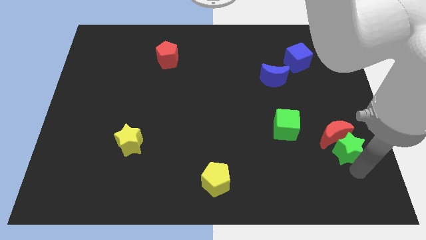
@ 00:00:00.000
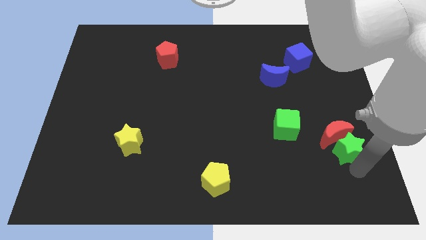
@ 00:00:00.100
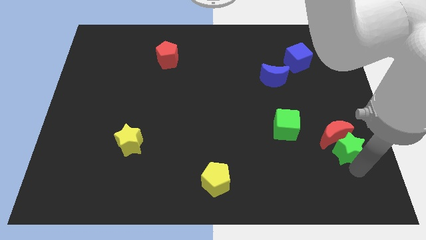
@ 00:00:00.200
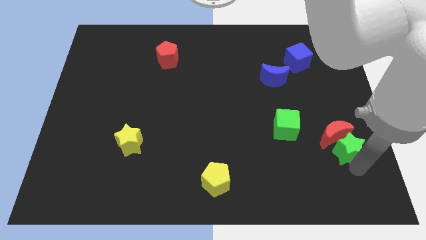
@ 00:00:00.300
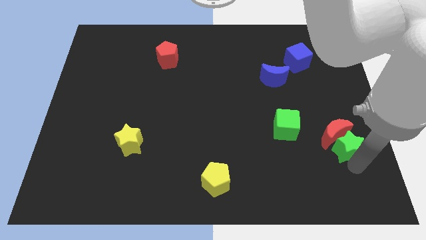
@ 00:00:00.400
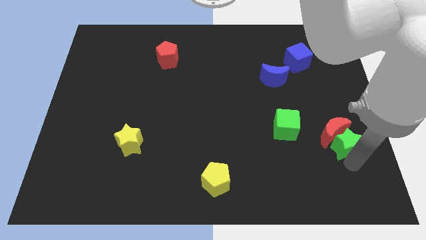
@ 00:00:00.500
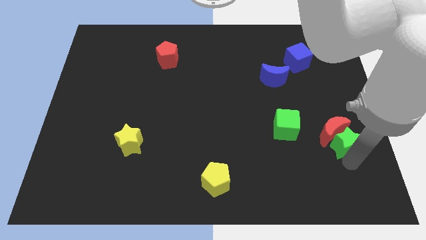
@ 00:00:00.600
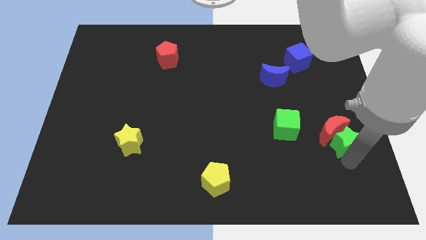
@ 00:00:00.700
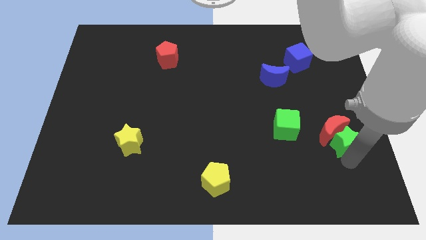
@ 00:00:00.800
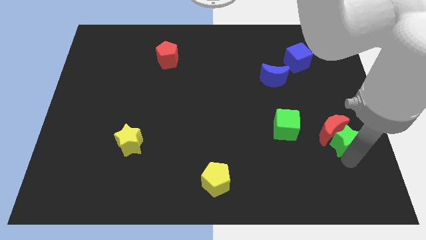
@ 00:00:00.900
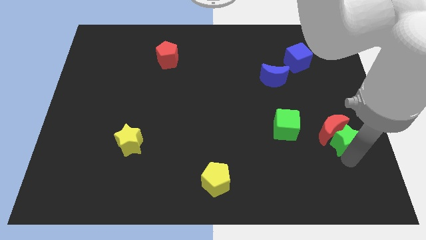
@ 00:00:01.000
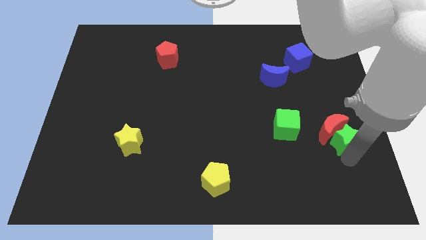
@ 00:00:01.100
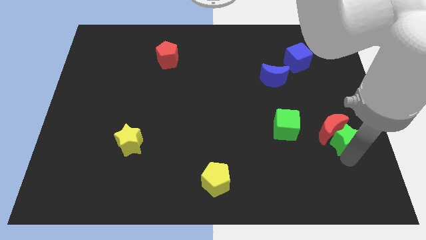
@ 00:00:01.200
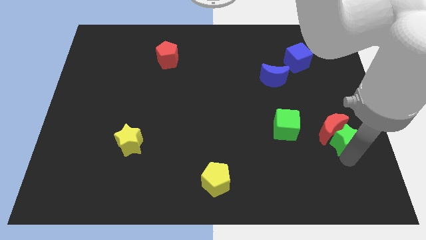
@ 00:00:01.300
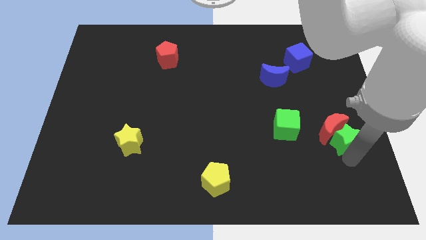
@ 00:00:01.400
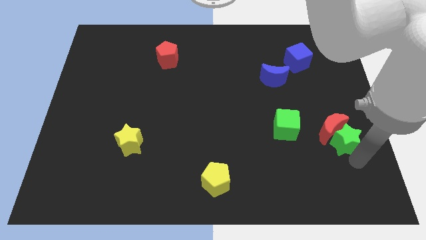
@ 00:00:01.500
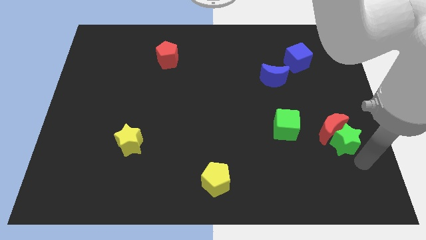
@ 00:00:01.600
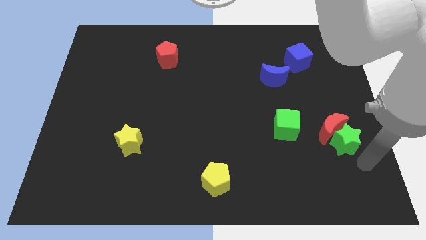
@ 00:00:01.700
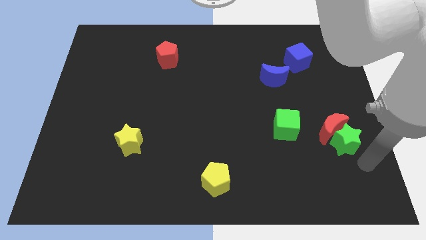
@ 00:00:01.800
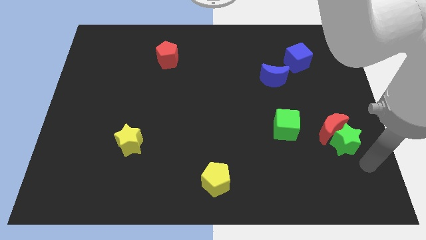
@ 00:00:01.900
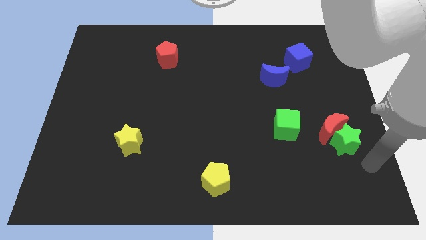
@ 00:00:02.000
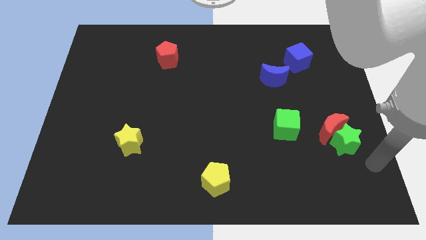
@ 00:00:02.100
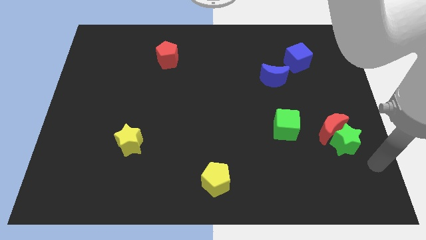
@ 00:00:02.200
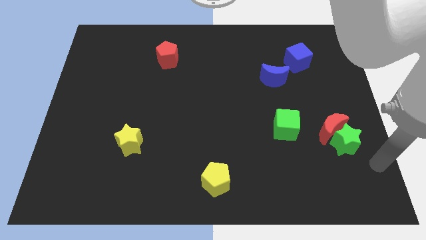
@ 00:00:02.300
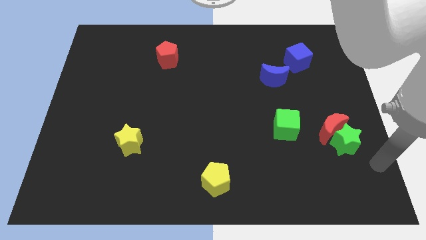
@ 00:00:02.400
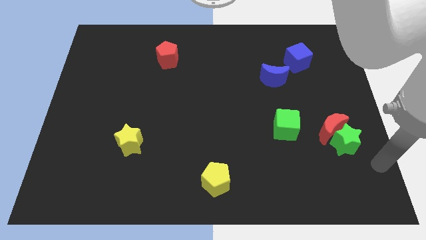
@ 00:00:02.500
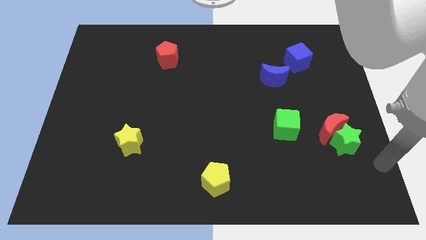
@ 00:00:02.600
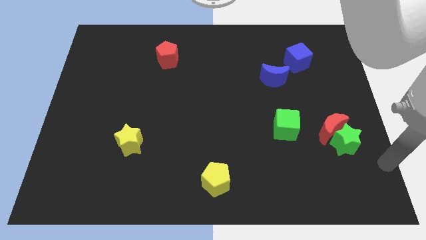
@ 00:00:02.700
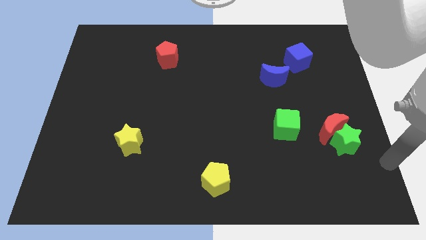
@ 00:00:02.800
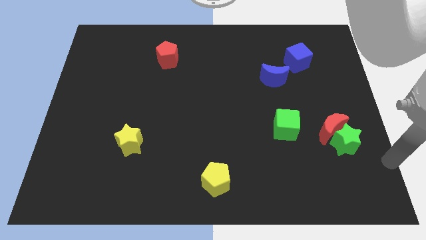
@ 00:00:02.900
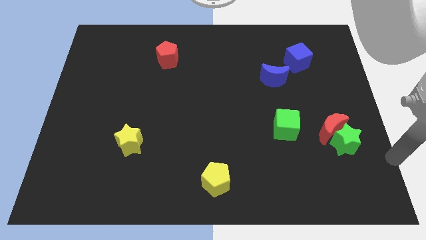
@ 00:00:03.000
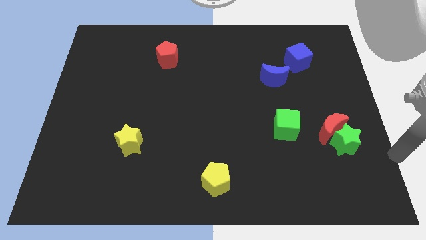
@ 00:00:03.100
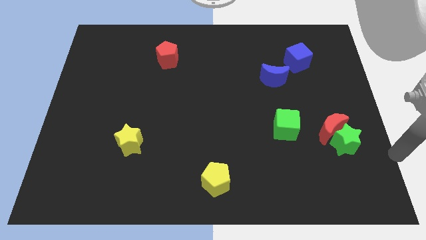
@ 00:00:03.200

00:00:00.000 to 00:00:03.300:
move both red crescent and green star towards the right center of the board

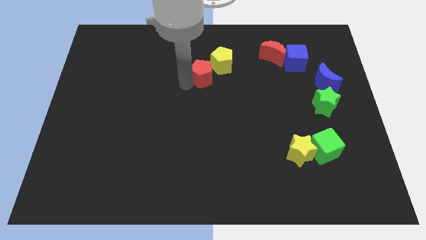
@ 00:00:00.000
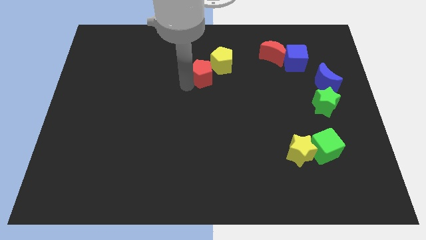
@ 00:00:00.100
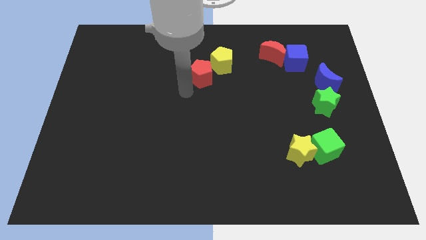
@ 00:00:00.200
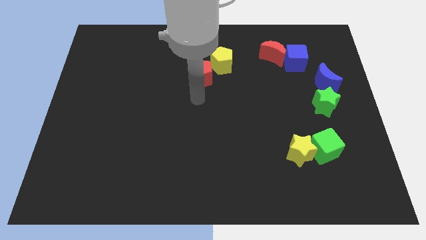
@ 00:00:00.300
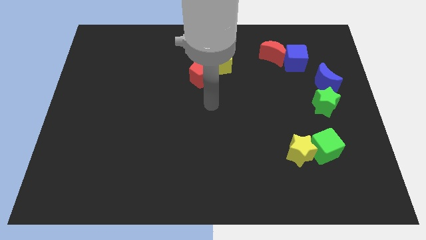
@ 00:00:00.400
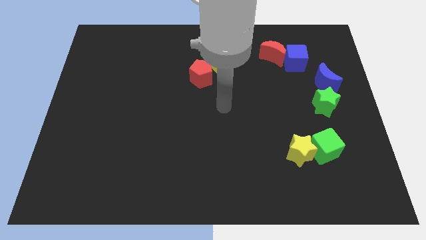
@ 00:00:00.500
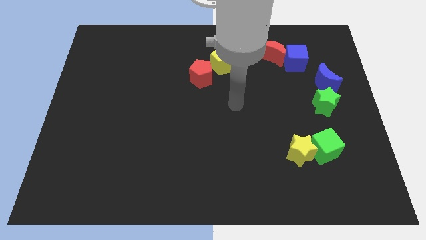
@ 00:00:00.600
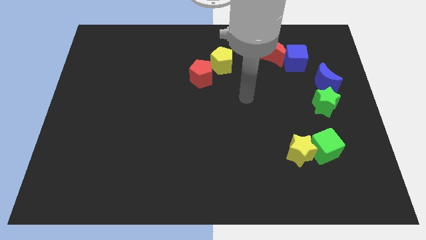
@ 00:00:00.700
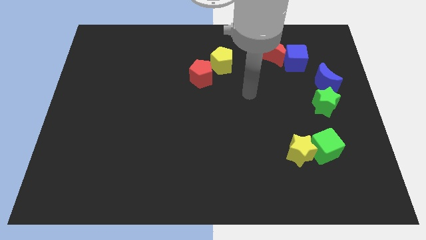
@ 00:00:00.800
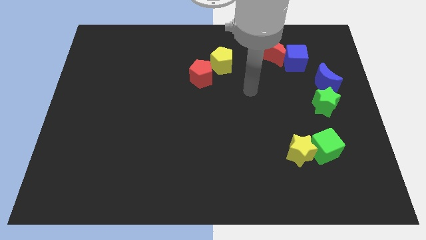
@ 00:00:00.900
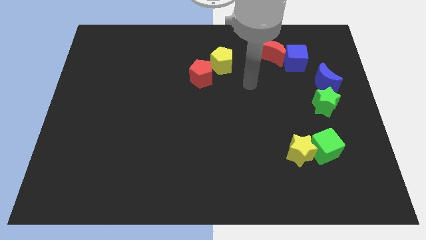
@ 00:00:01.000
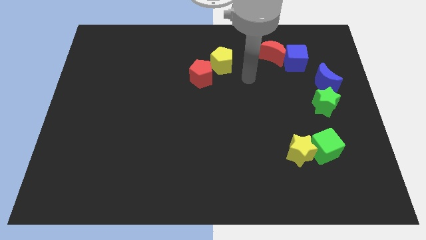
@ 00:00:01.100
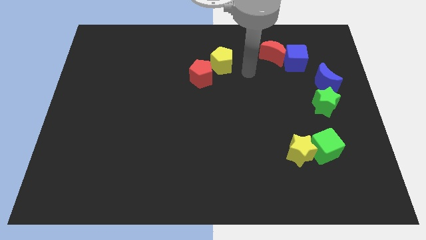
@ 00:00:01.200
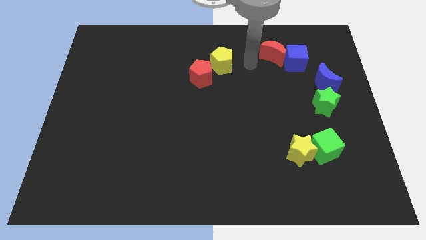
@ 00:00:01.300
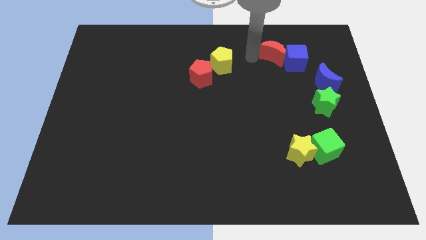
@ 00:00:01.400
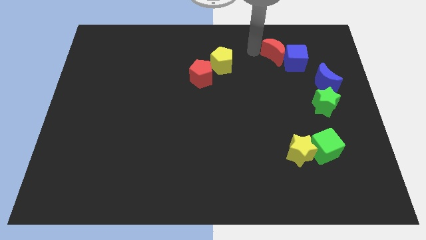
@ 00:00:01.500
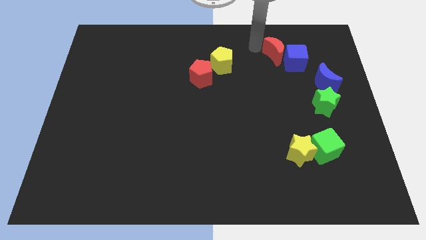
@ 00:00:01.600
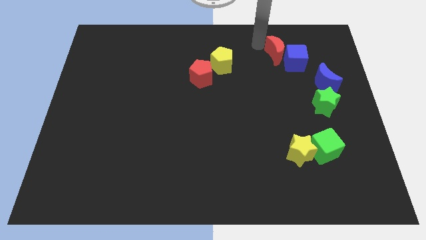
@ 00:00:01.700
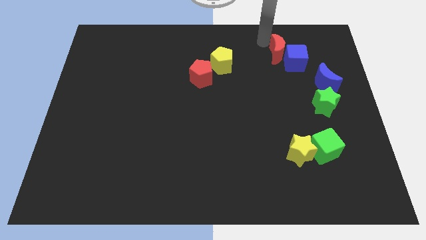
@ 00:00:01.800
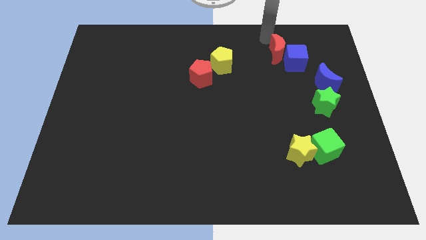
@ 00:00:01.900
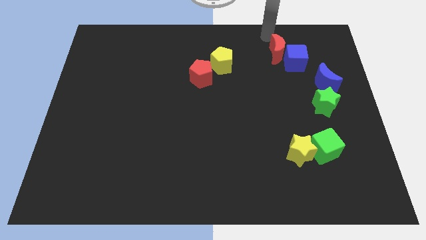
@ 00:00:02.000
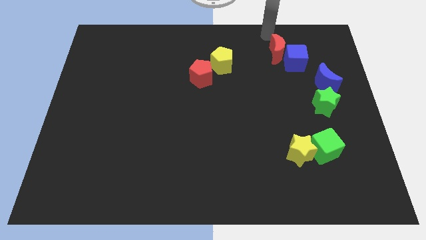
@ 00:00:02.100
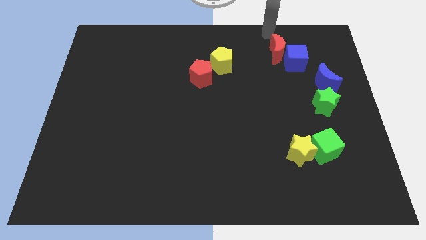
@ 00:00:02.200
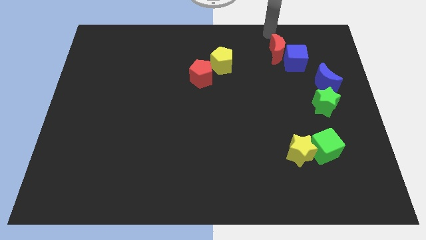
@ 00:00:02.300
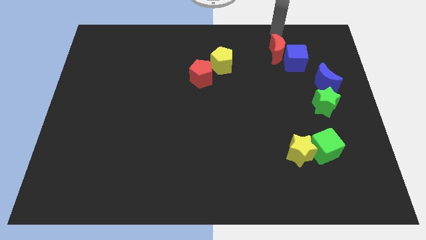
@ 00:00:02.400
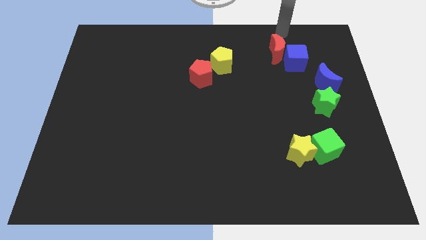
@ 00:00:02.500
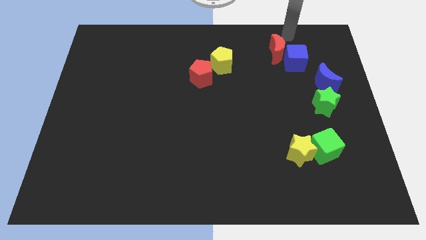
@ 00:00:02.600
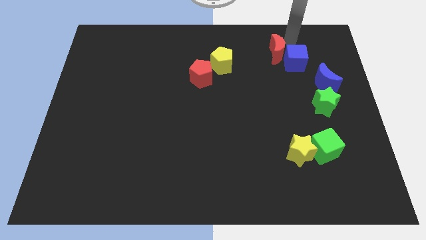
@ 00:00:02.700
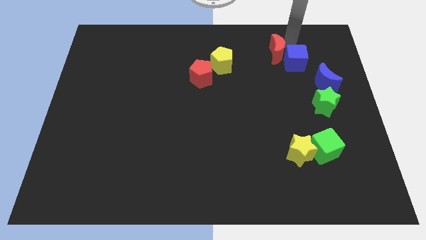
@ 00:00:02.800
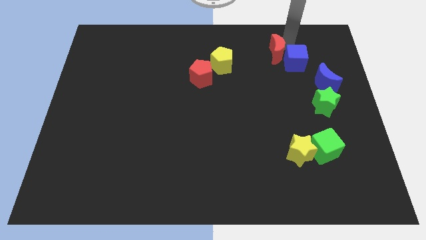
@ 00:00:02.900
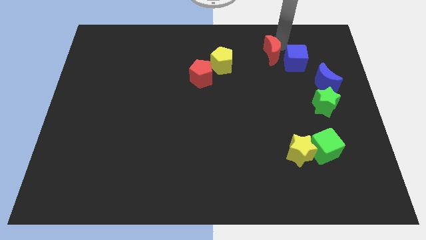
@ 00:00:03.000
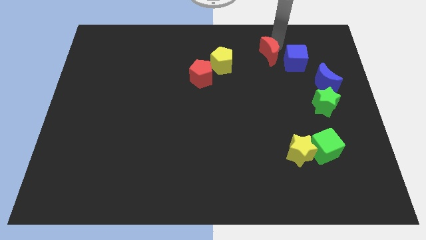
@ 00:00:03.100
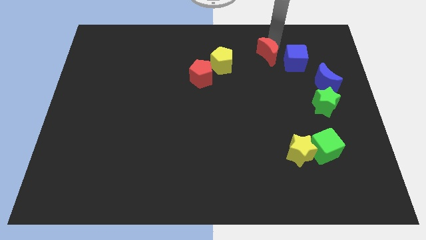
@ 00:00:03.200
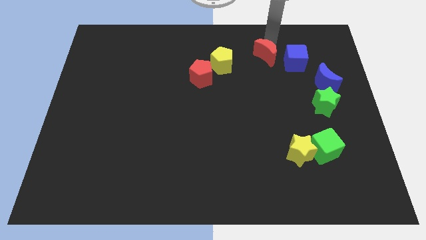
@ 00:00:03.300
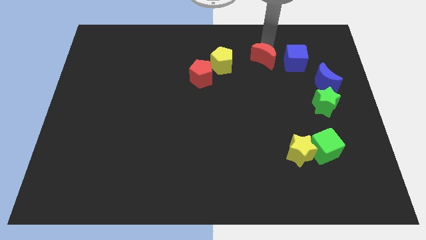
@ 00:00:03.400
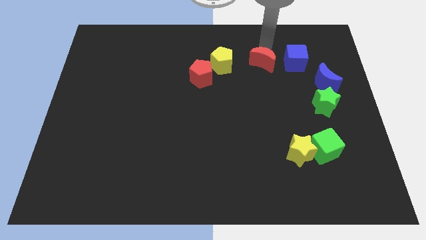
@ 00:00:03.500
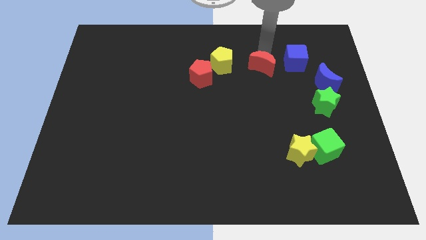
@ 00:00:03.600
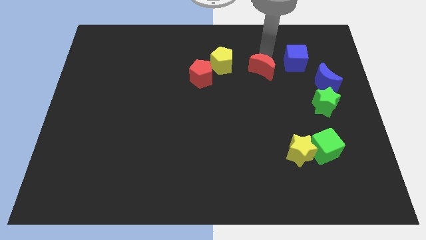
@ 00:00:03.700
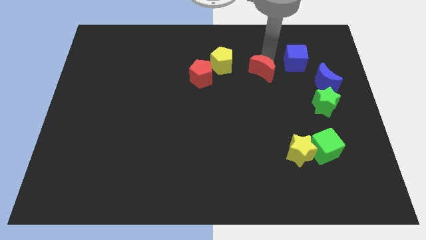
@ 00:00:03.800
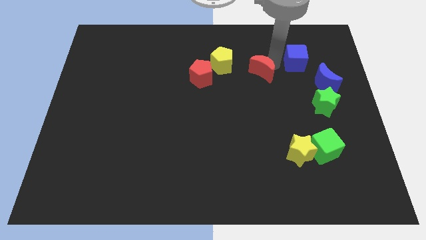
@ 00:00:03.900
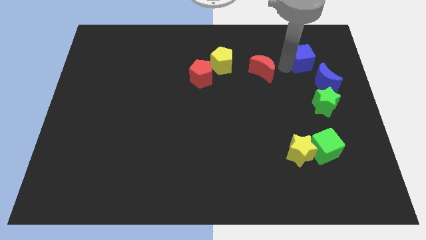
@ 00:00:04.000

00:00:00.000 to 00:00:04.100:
separate the red moon from the blue cube

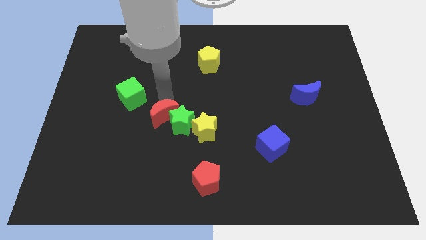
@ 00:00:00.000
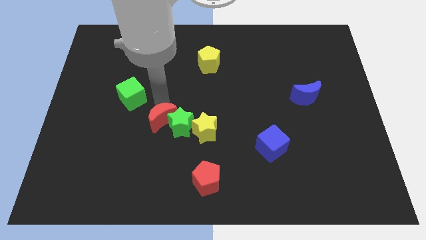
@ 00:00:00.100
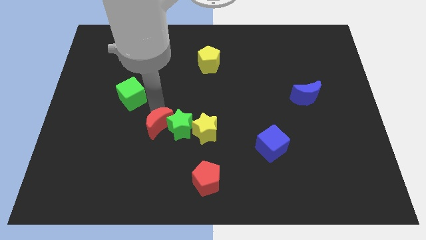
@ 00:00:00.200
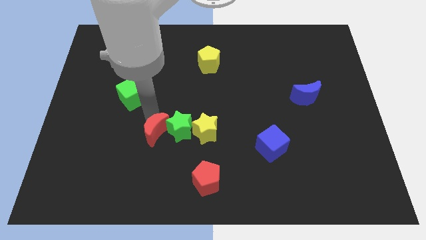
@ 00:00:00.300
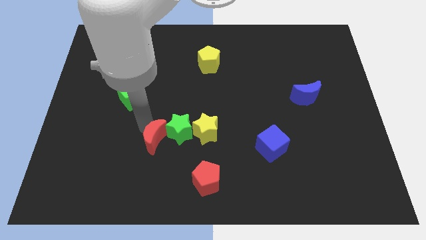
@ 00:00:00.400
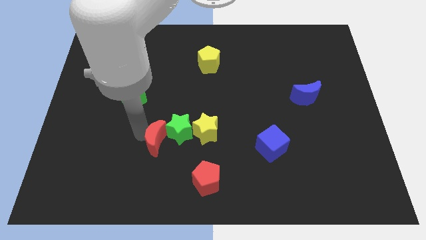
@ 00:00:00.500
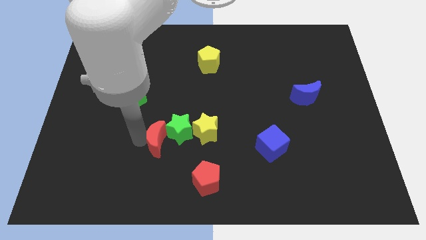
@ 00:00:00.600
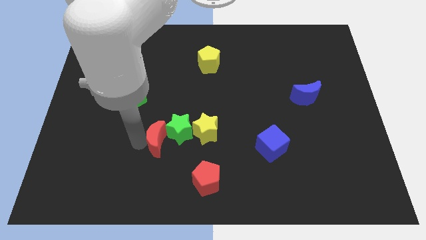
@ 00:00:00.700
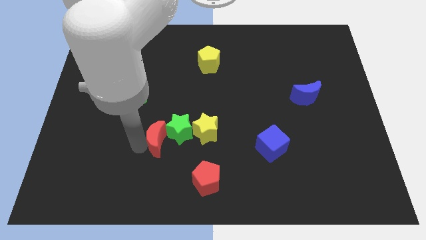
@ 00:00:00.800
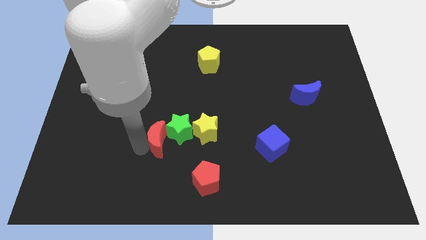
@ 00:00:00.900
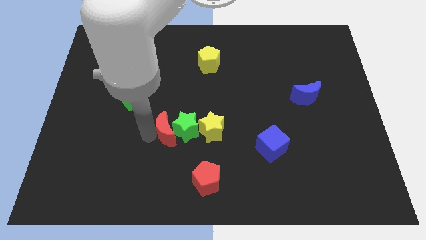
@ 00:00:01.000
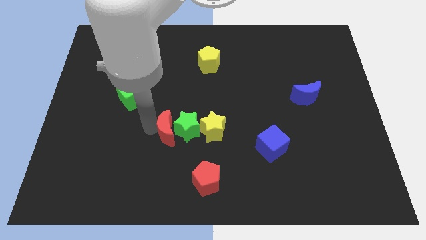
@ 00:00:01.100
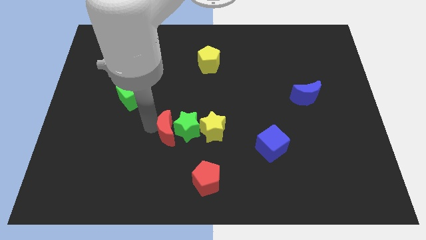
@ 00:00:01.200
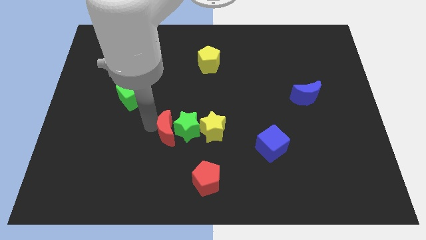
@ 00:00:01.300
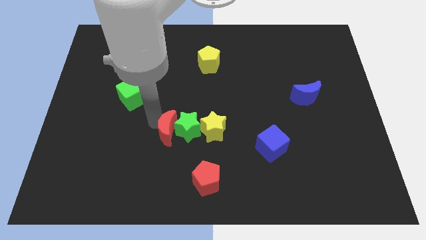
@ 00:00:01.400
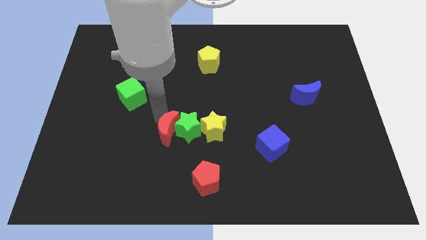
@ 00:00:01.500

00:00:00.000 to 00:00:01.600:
push the red moon to the left side of the green star
